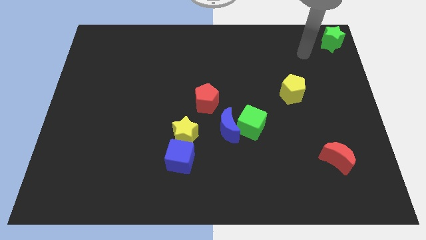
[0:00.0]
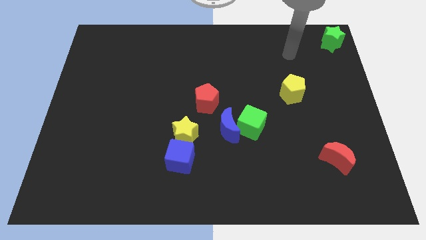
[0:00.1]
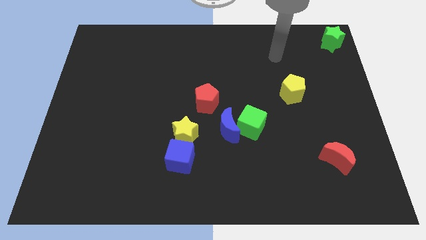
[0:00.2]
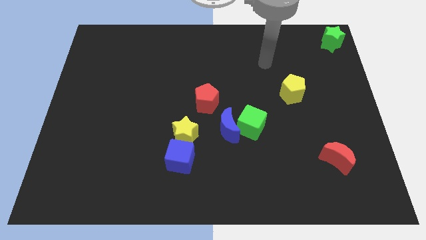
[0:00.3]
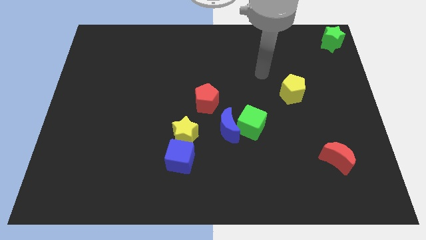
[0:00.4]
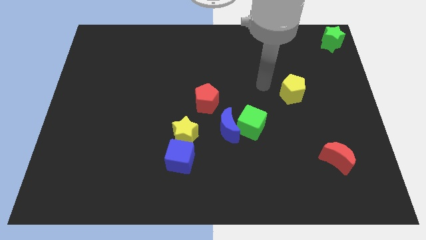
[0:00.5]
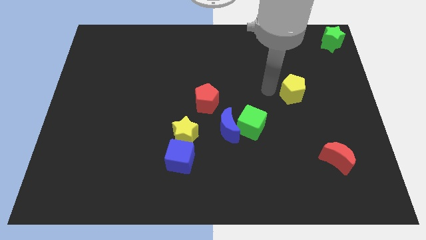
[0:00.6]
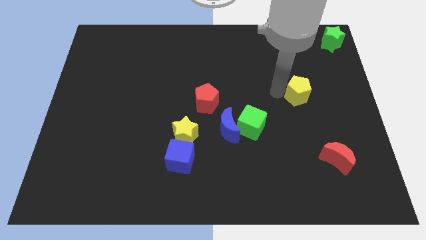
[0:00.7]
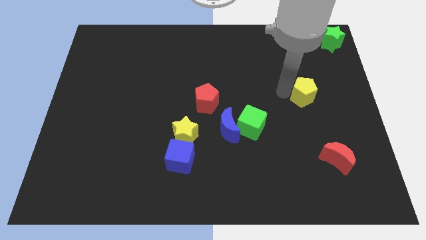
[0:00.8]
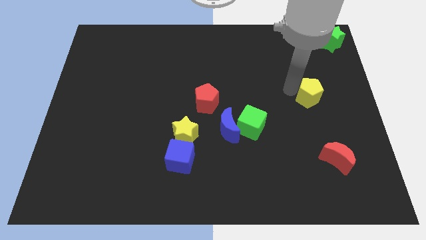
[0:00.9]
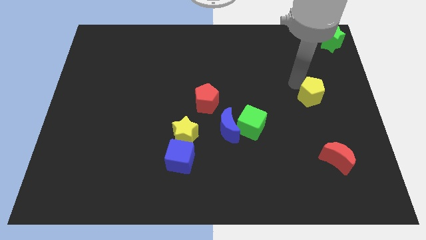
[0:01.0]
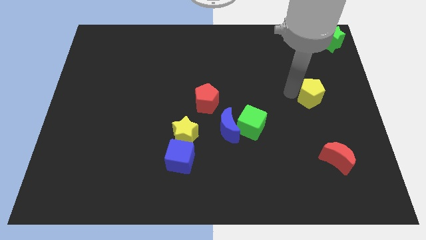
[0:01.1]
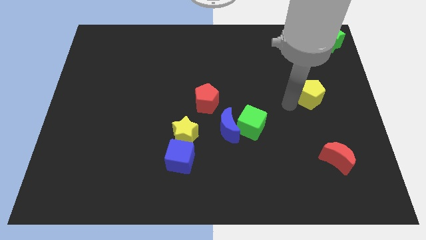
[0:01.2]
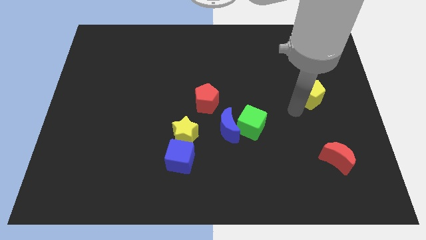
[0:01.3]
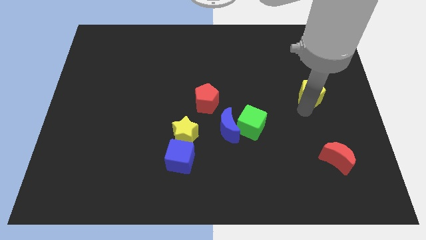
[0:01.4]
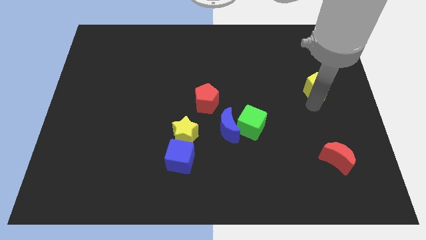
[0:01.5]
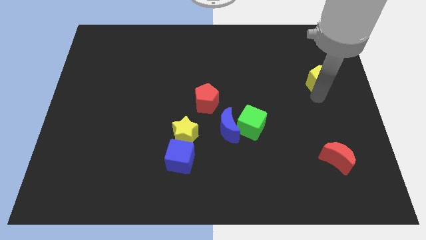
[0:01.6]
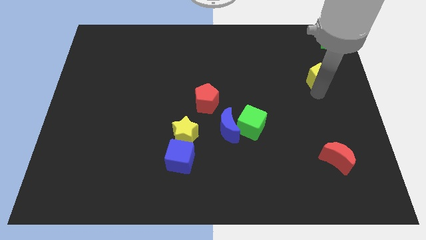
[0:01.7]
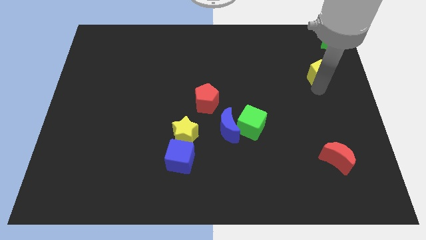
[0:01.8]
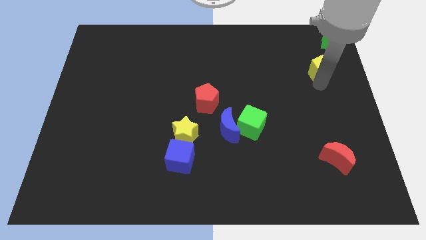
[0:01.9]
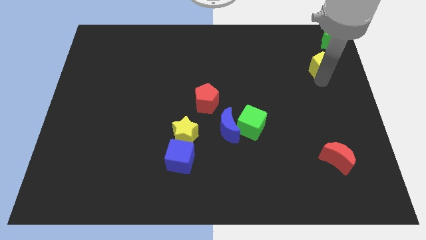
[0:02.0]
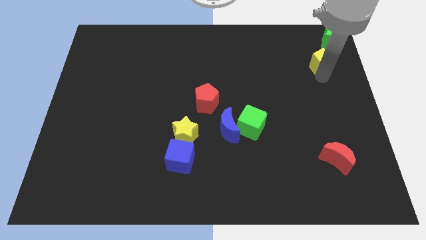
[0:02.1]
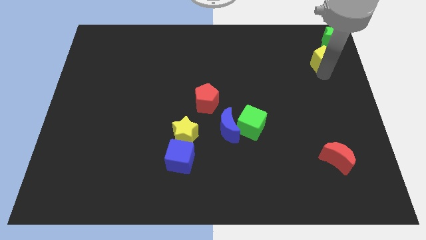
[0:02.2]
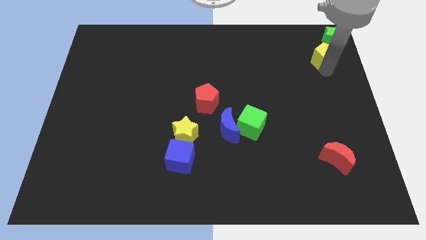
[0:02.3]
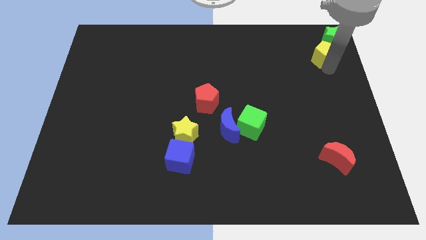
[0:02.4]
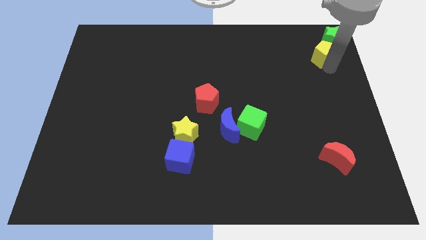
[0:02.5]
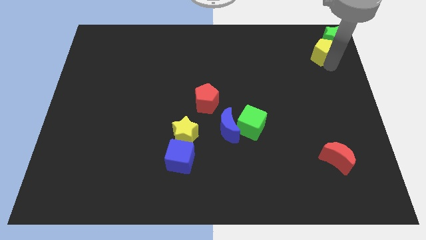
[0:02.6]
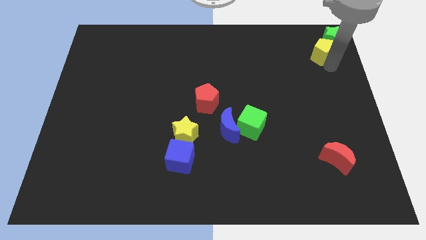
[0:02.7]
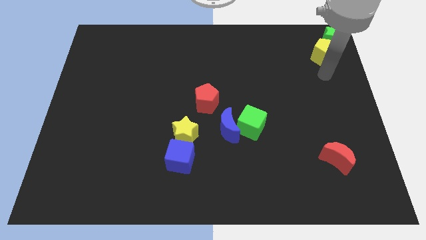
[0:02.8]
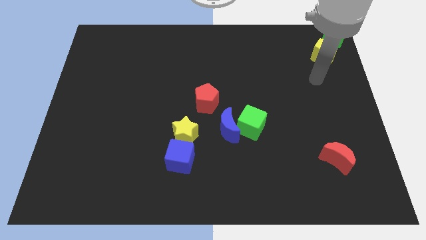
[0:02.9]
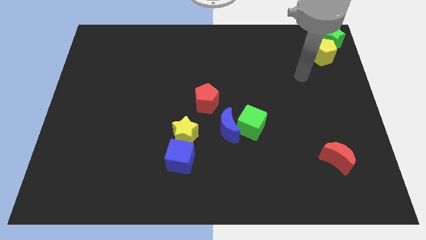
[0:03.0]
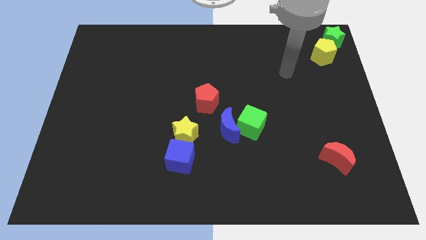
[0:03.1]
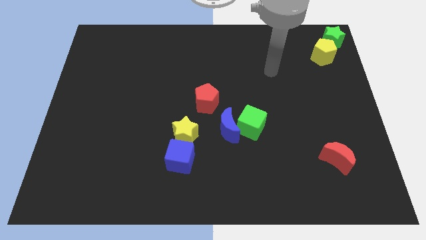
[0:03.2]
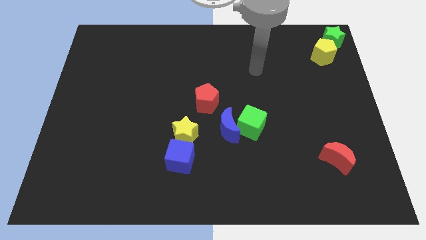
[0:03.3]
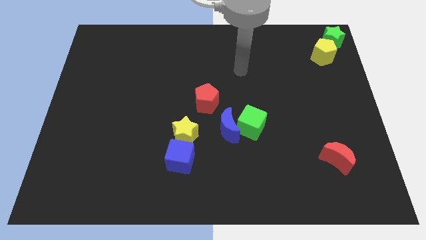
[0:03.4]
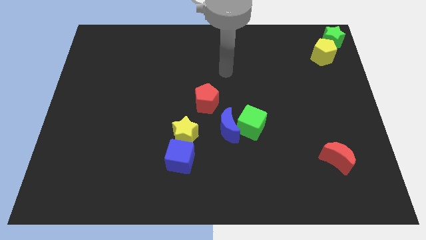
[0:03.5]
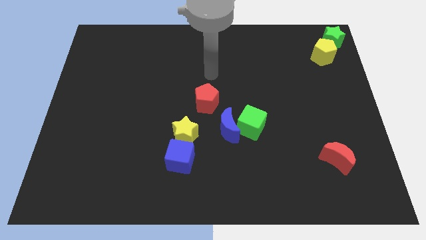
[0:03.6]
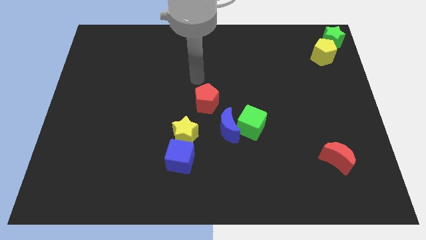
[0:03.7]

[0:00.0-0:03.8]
move the yellow pentagon close to the green star

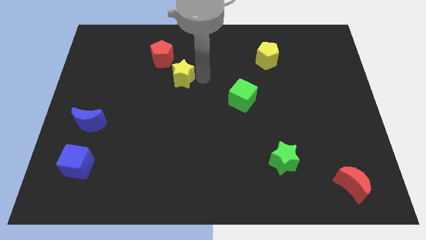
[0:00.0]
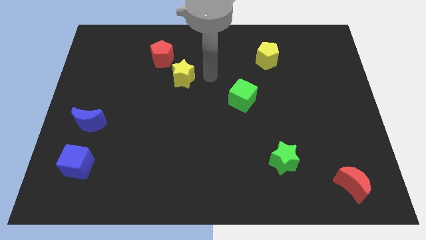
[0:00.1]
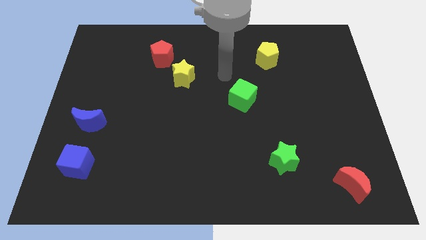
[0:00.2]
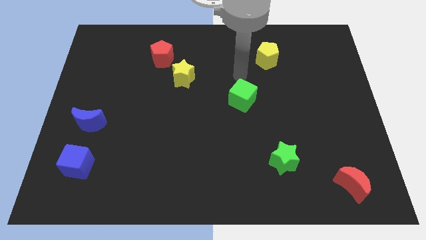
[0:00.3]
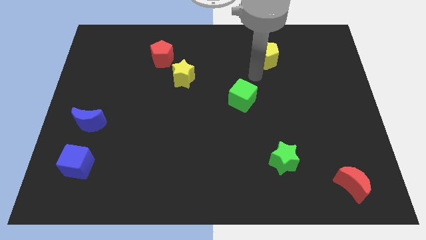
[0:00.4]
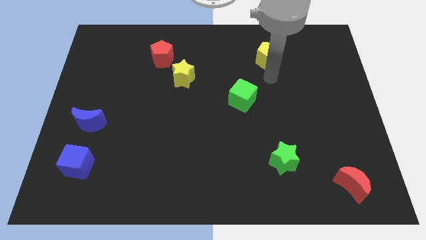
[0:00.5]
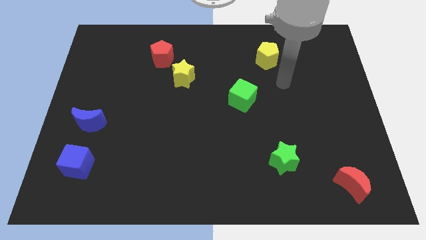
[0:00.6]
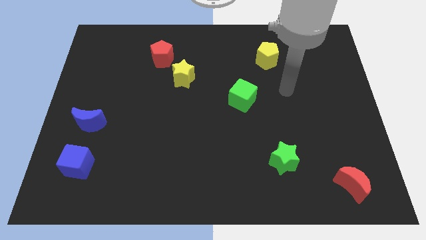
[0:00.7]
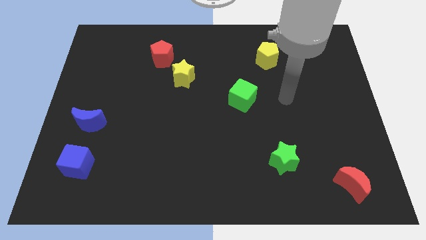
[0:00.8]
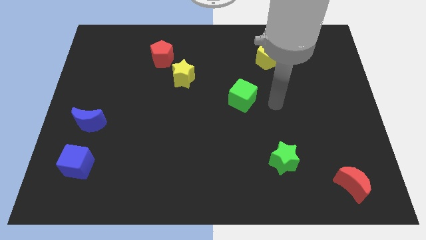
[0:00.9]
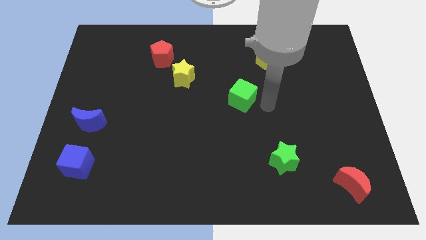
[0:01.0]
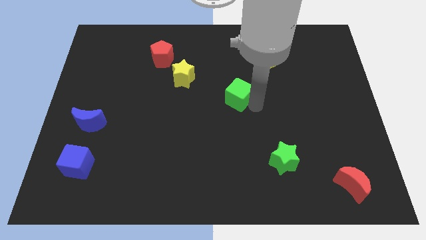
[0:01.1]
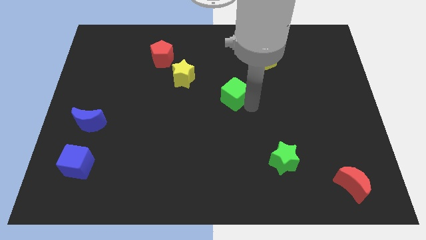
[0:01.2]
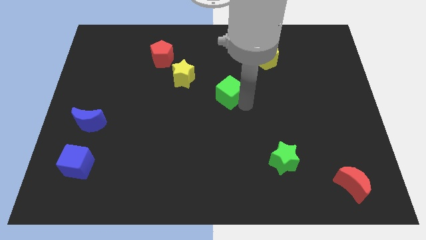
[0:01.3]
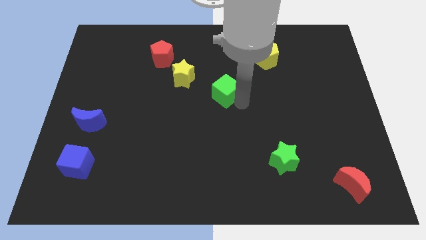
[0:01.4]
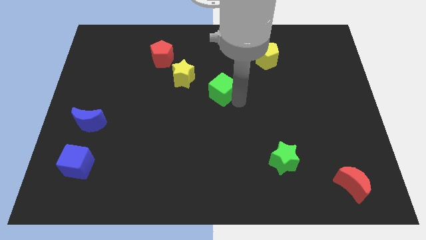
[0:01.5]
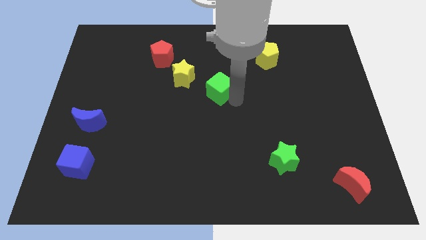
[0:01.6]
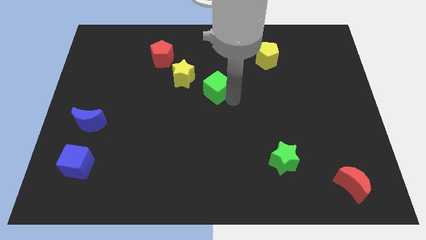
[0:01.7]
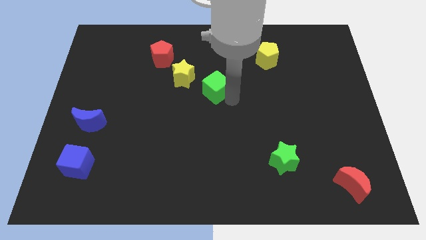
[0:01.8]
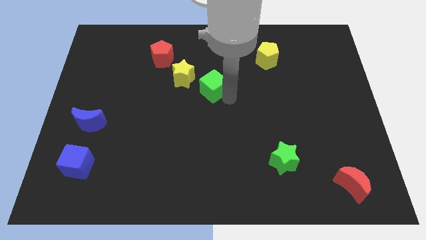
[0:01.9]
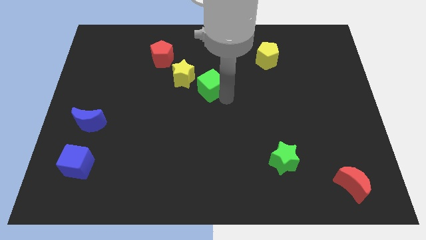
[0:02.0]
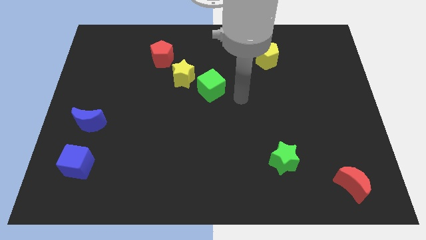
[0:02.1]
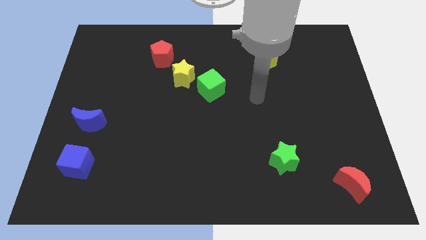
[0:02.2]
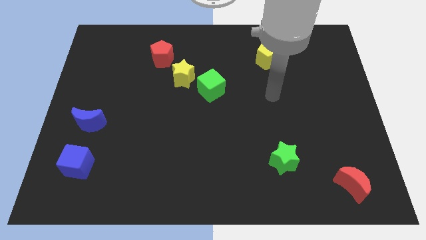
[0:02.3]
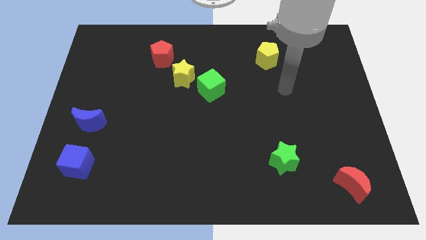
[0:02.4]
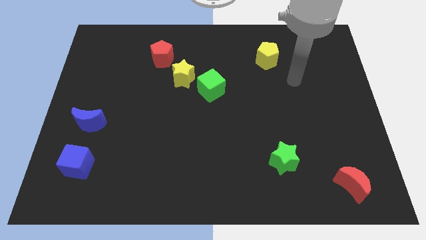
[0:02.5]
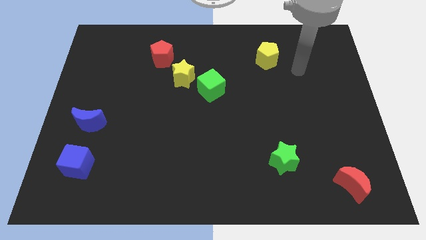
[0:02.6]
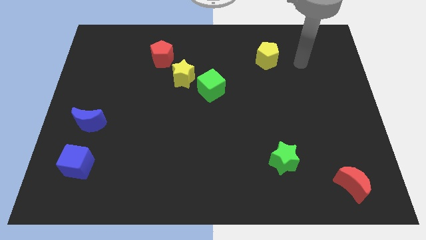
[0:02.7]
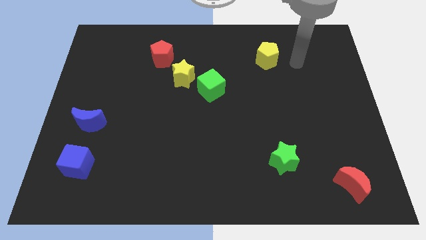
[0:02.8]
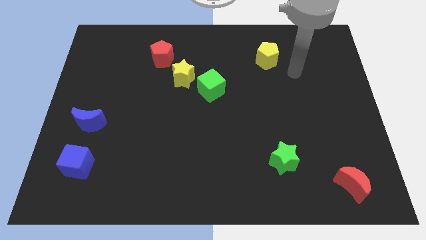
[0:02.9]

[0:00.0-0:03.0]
push the green cube to the bottom right of the yellow star

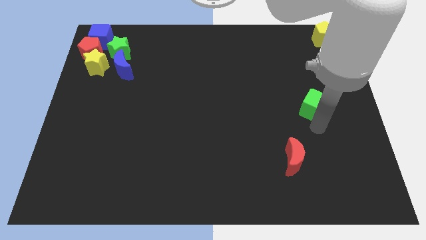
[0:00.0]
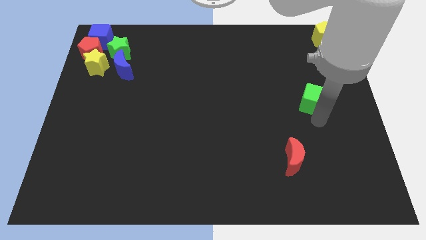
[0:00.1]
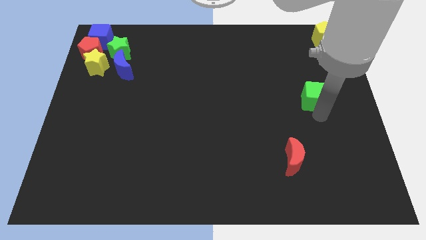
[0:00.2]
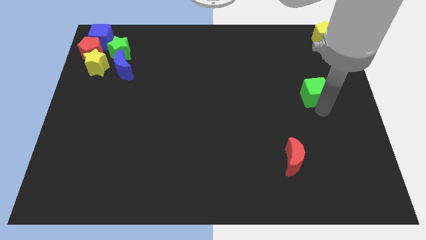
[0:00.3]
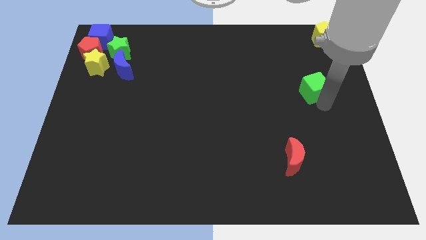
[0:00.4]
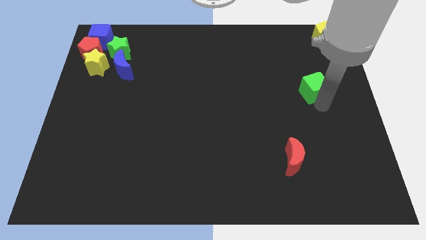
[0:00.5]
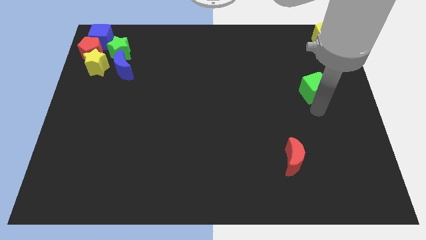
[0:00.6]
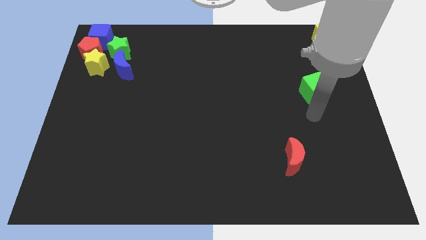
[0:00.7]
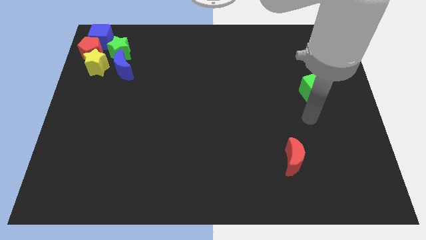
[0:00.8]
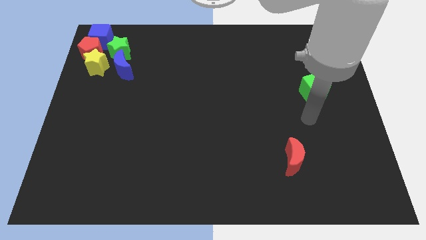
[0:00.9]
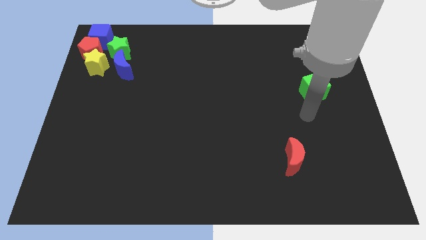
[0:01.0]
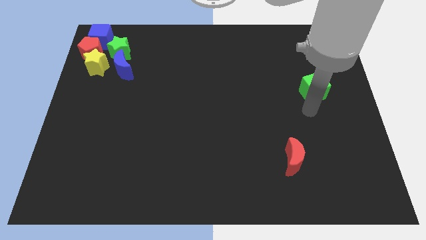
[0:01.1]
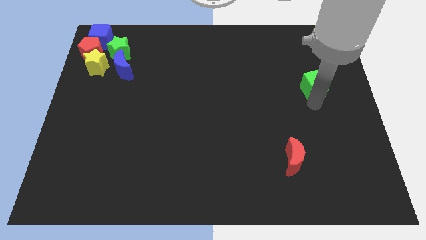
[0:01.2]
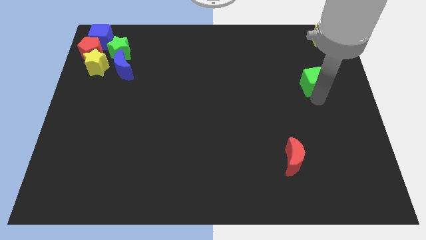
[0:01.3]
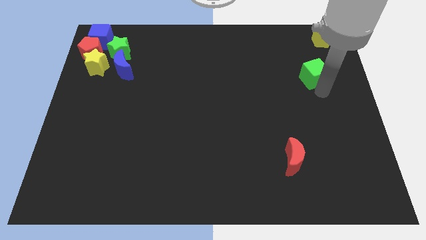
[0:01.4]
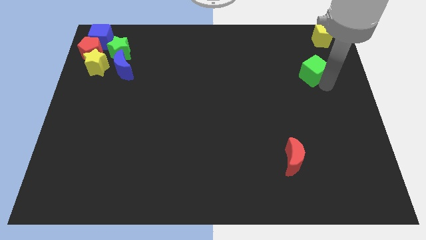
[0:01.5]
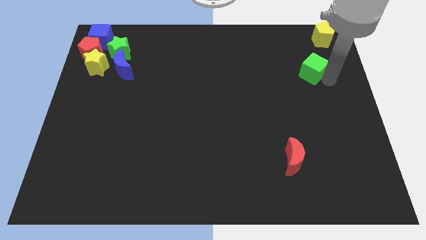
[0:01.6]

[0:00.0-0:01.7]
push the green cube towards the bottom side of the yellow pentagon

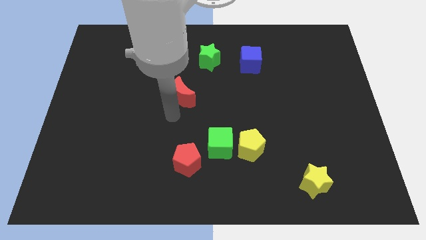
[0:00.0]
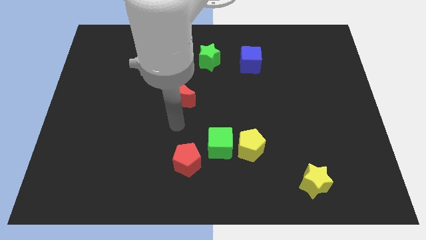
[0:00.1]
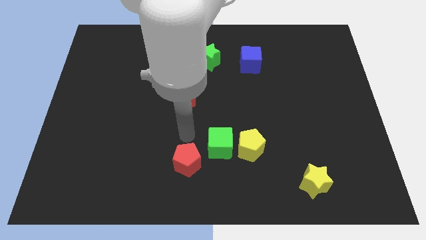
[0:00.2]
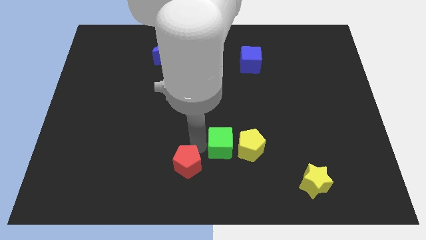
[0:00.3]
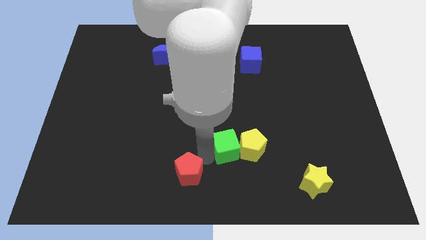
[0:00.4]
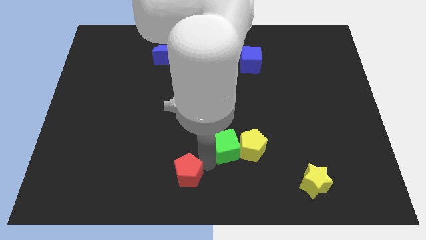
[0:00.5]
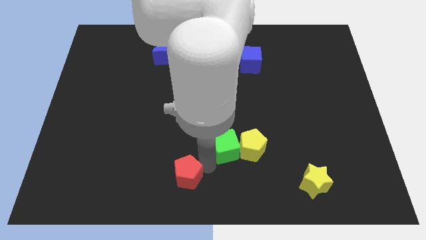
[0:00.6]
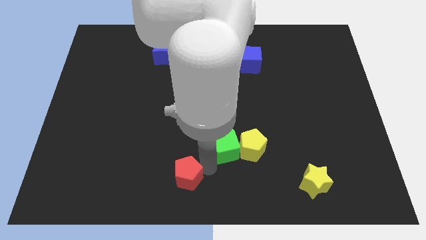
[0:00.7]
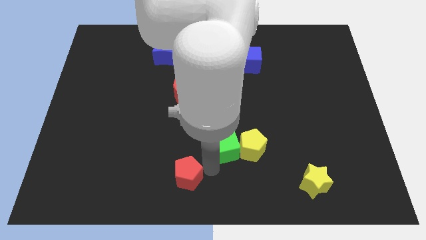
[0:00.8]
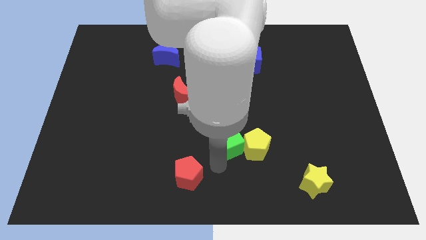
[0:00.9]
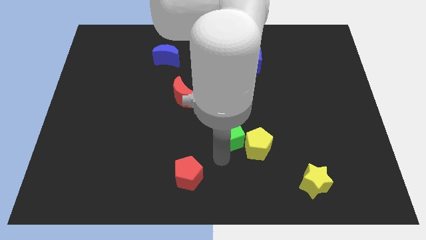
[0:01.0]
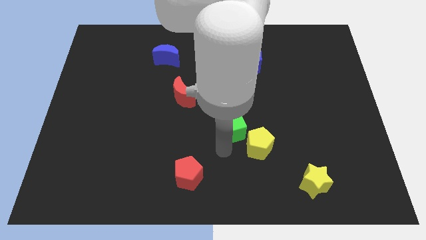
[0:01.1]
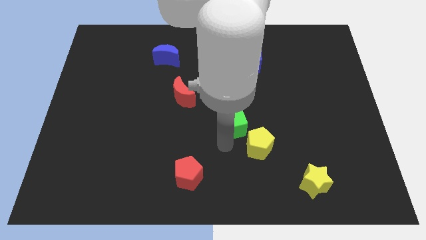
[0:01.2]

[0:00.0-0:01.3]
move the green cube up slightly
